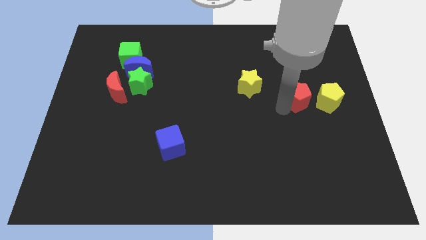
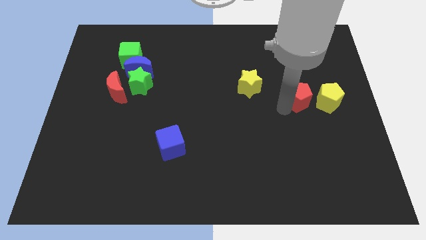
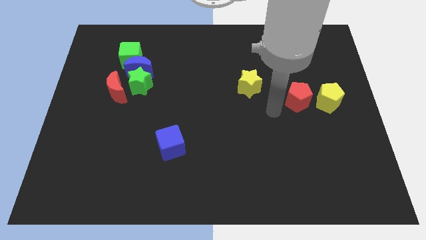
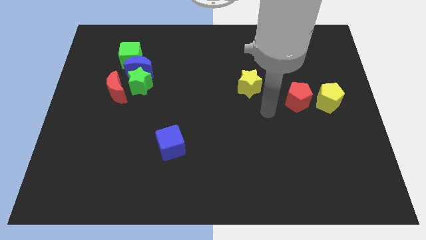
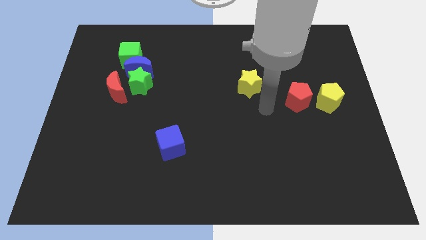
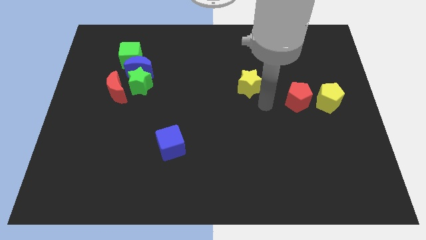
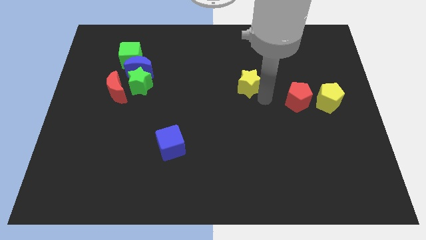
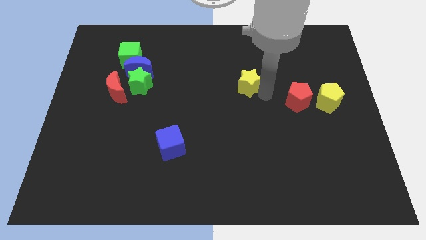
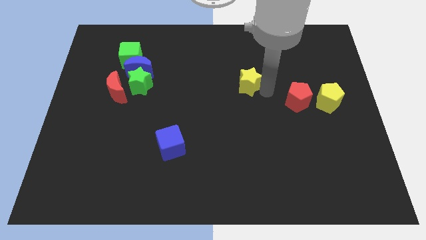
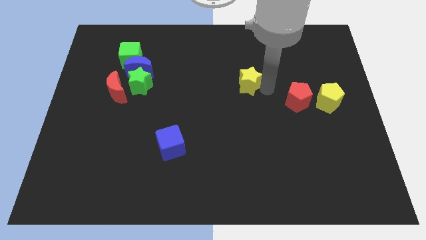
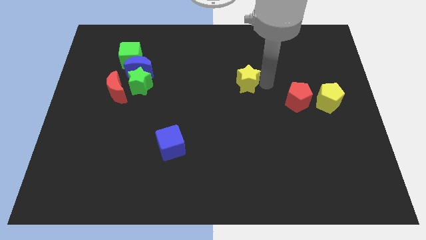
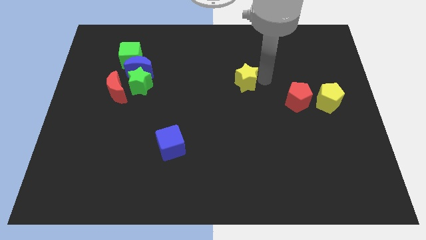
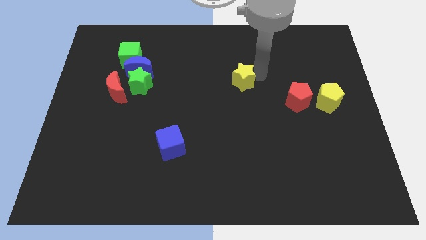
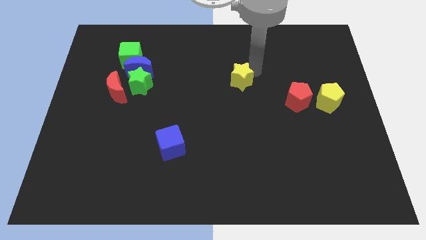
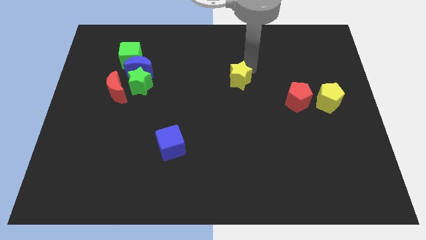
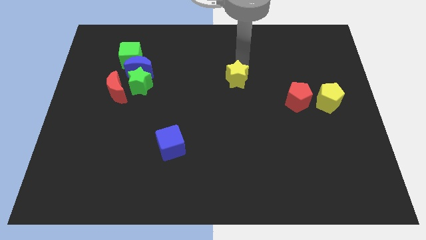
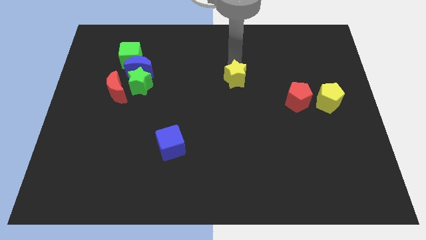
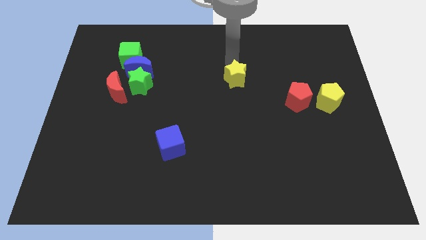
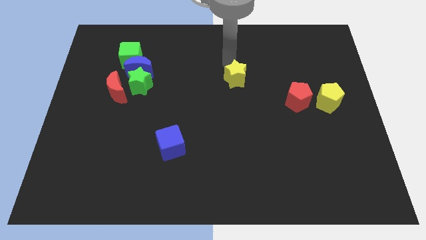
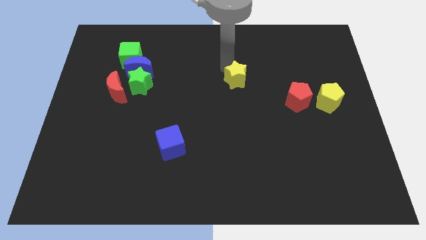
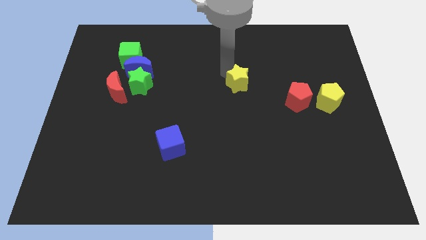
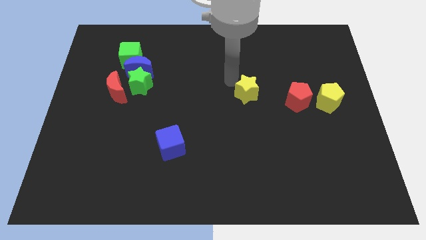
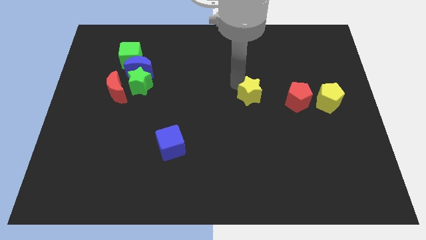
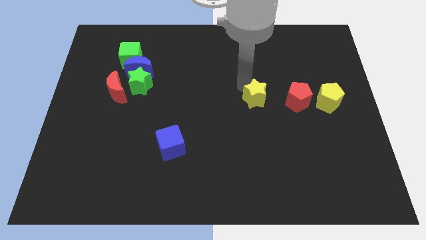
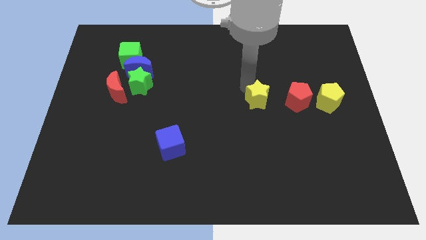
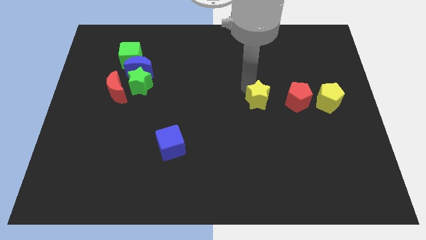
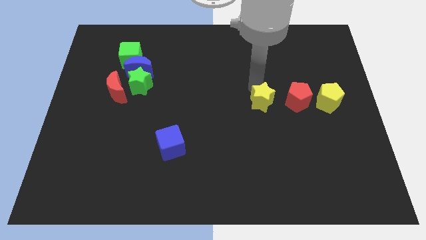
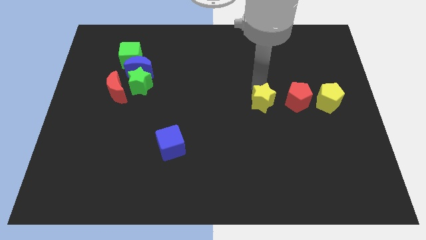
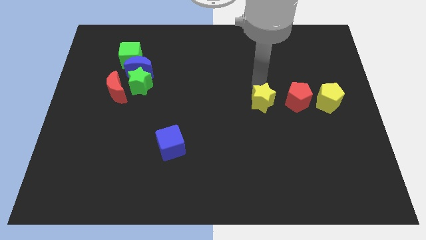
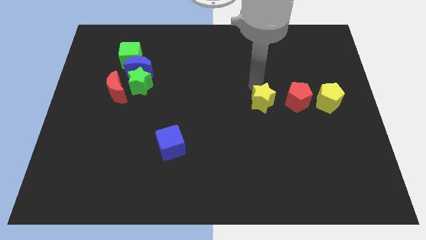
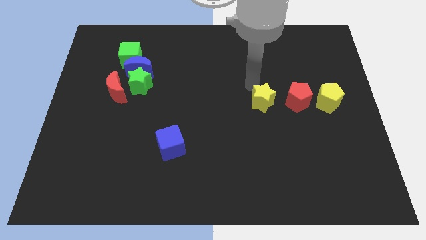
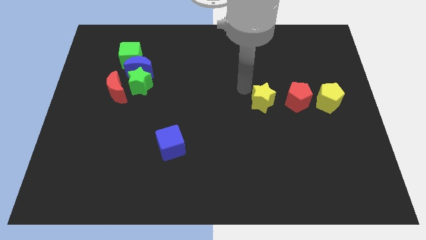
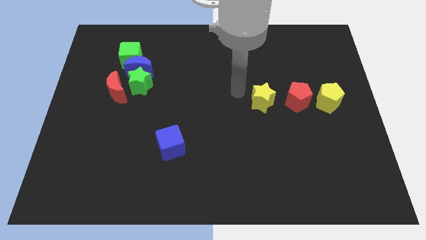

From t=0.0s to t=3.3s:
adjust the yellow star

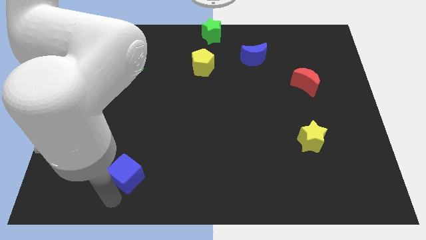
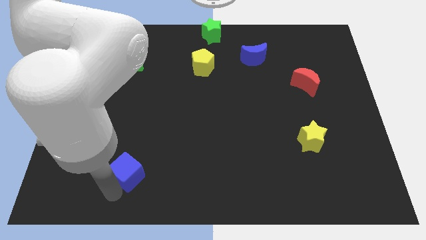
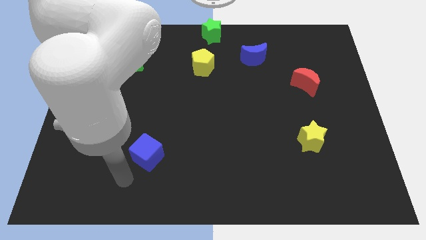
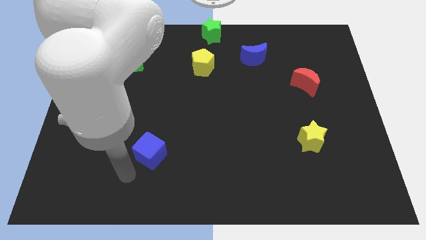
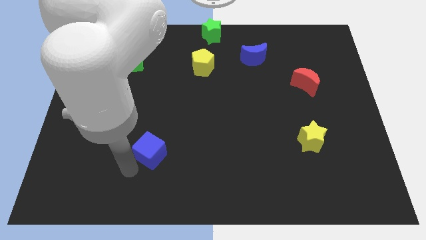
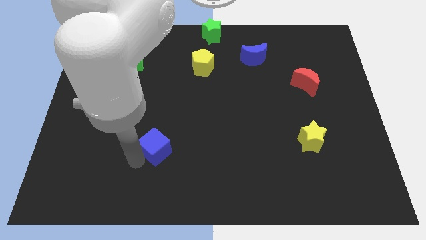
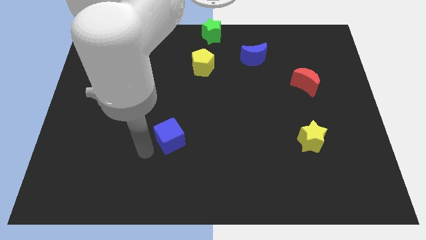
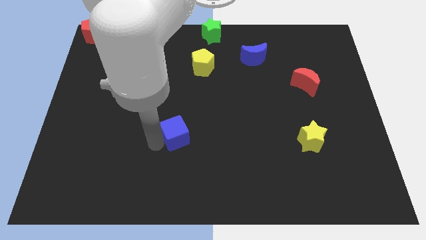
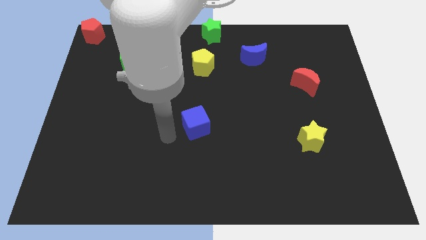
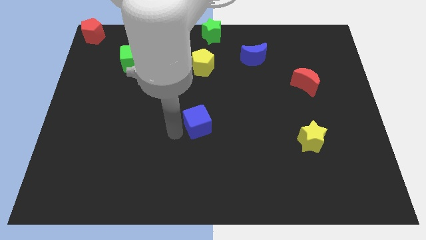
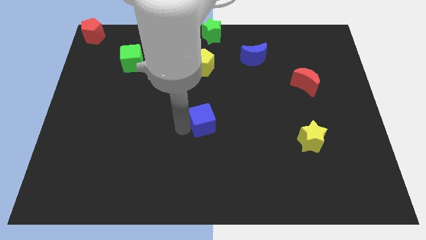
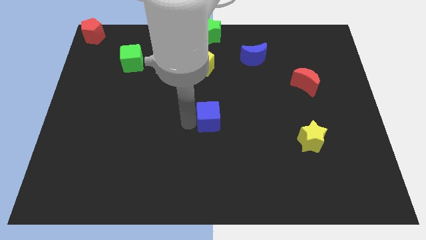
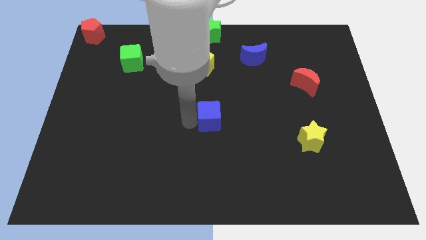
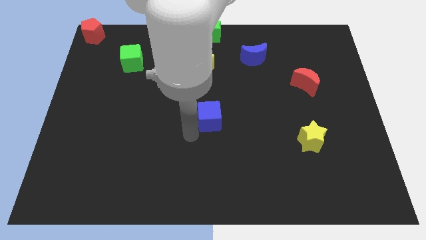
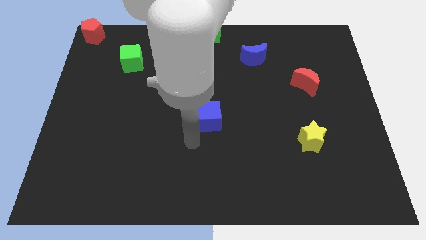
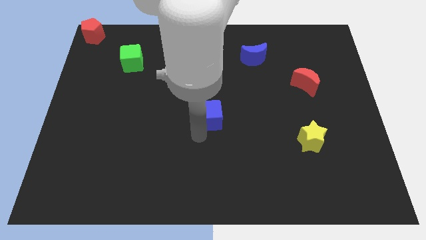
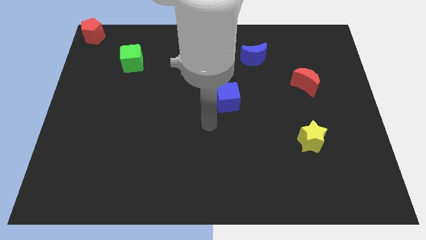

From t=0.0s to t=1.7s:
slide the blue cube to the center of the board

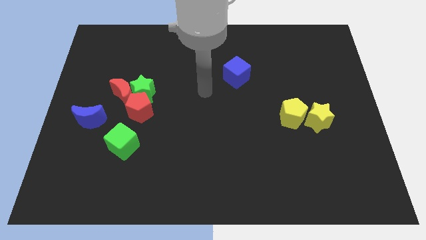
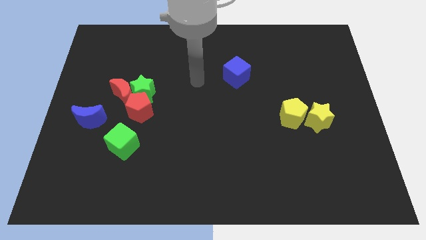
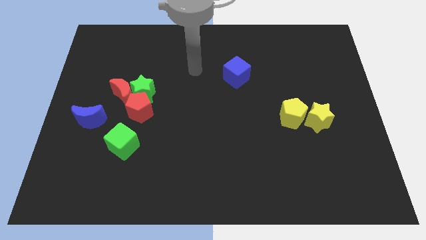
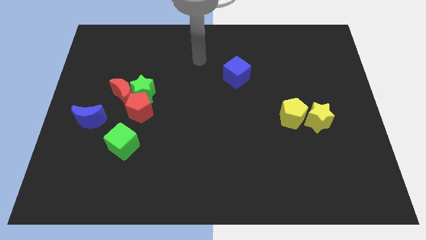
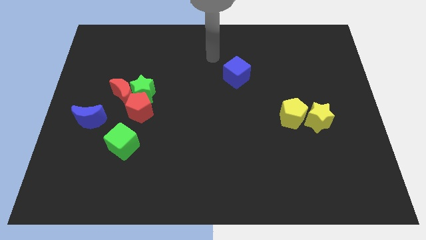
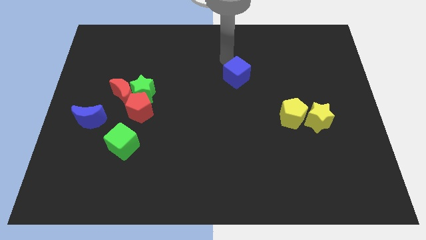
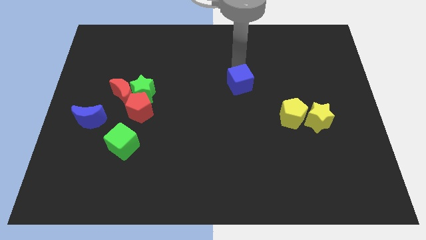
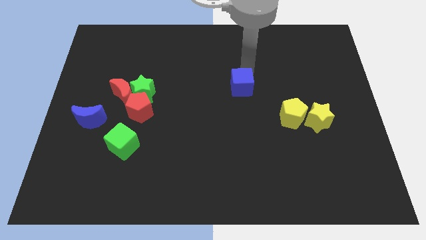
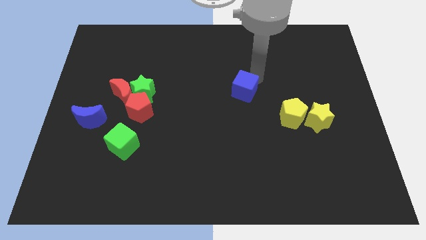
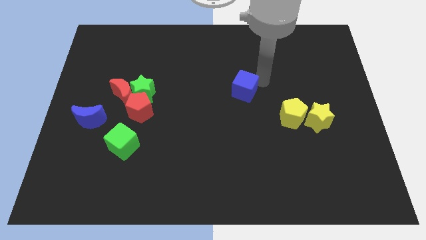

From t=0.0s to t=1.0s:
place the blue cube diagonally to the left of yellow pentagon

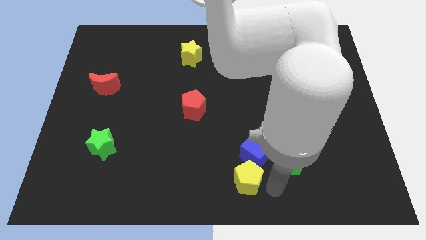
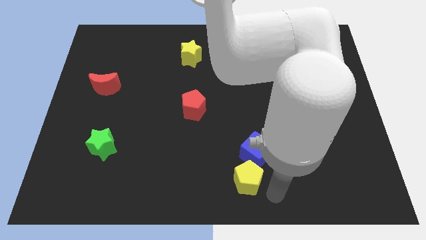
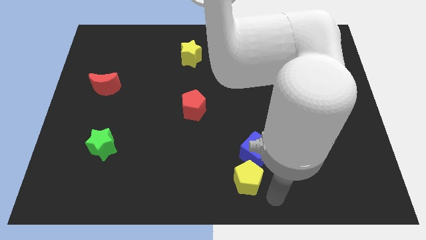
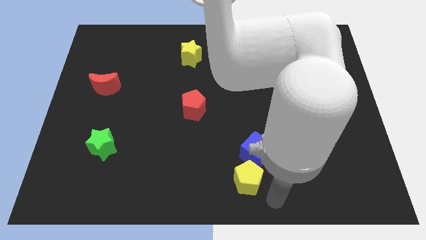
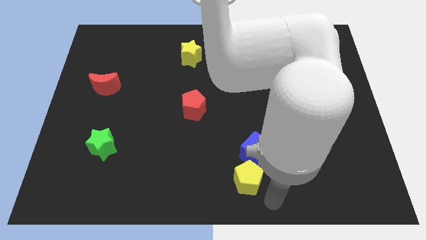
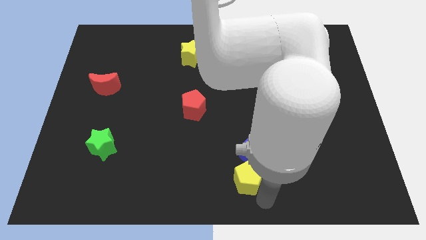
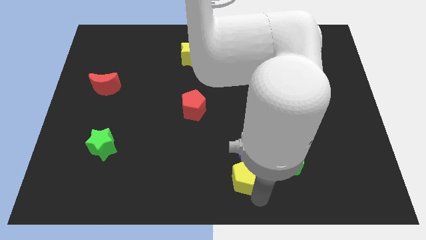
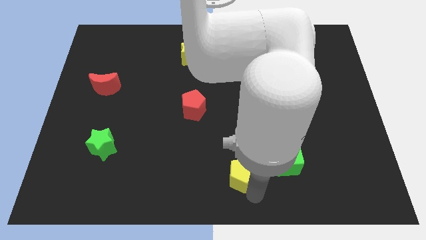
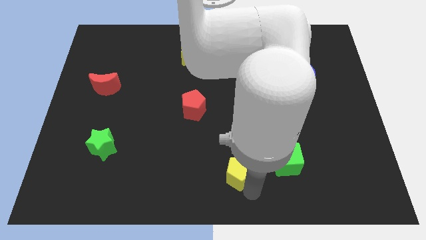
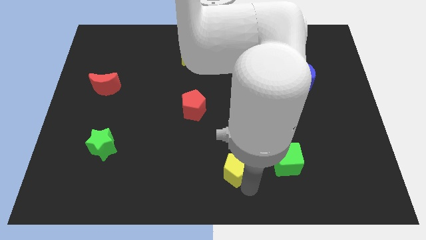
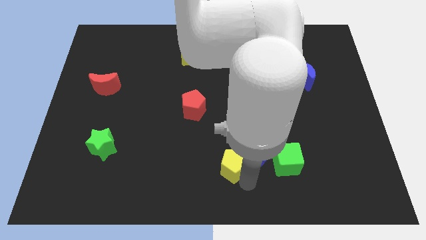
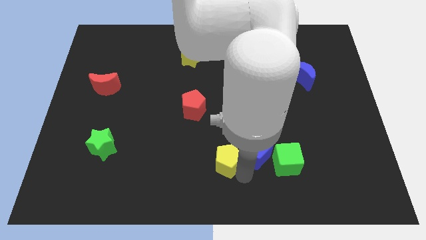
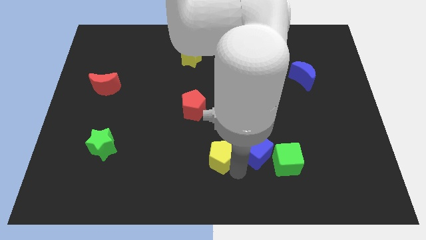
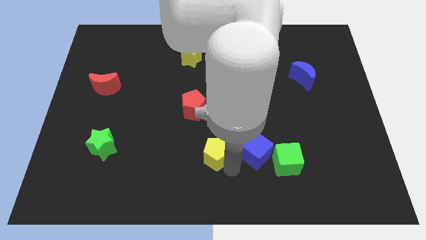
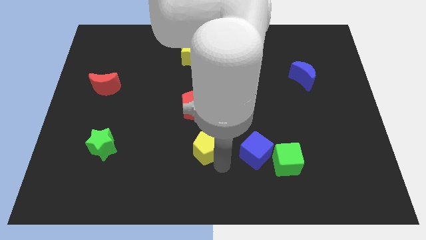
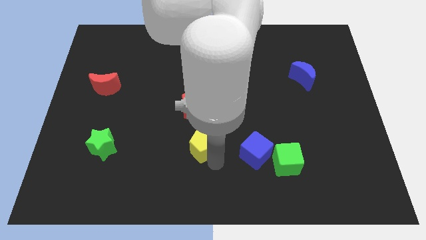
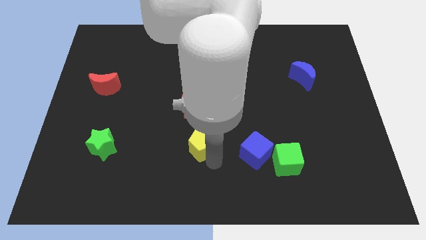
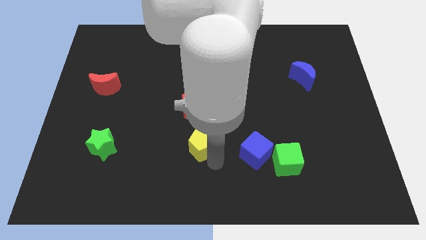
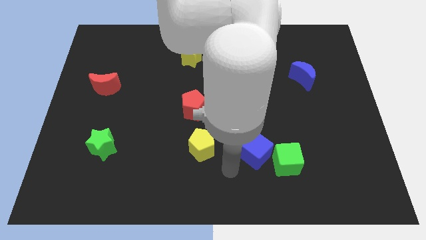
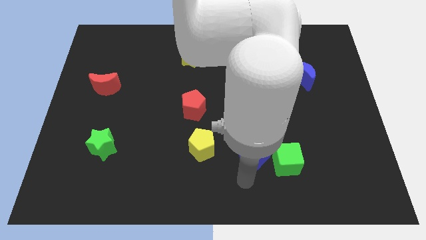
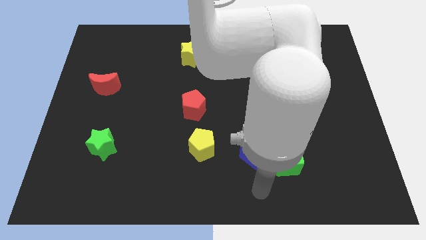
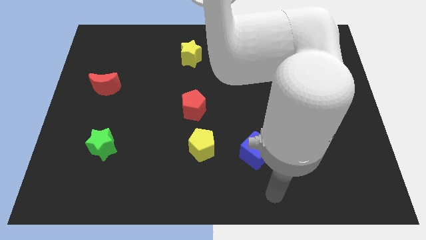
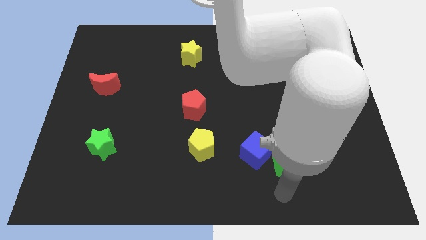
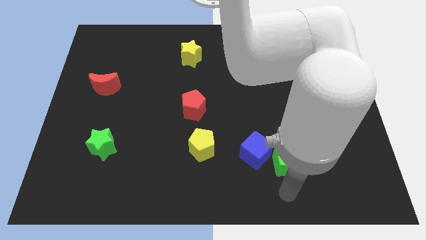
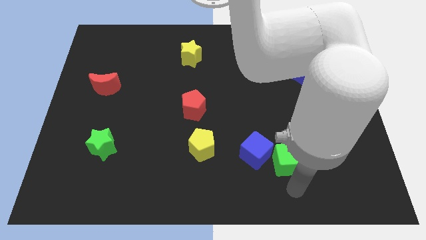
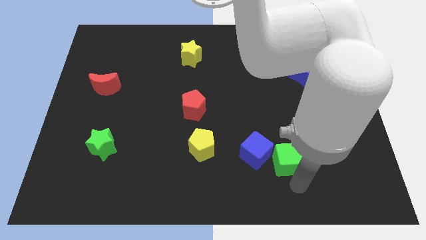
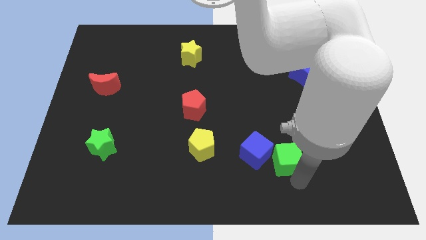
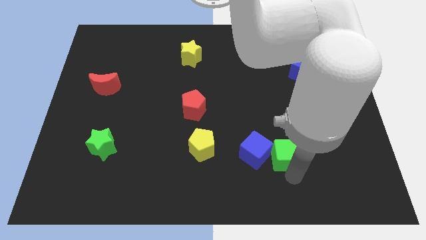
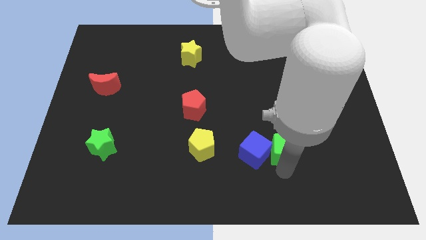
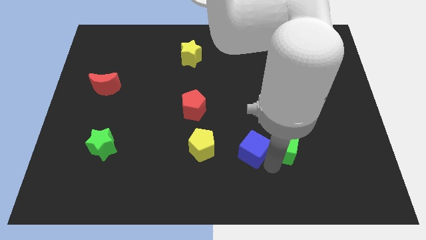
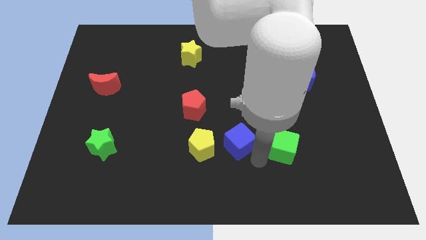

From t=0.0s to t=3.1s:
move the yellow pentagon bottom to the red pentagon
